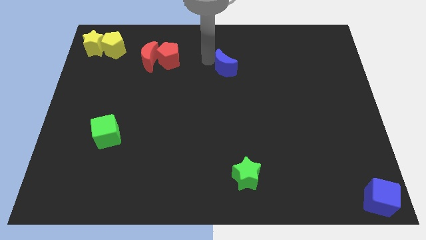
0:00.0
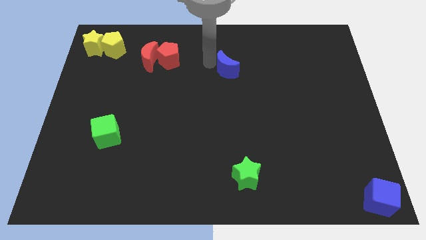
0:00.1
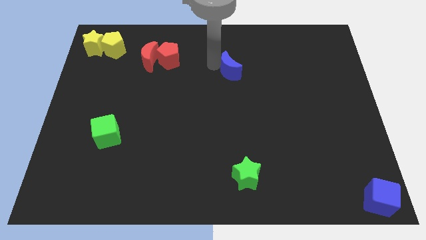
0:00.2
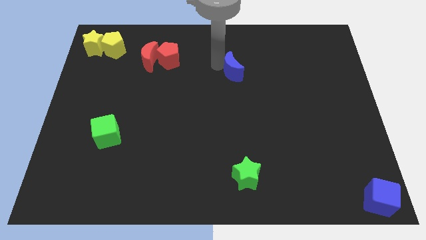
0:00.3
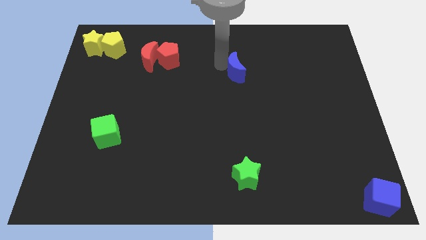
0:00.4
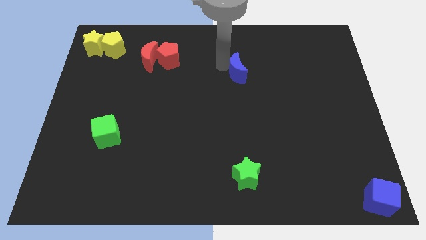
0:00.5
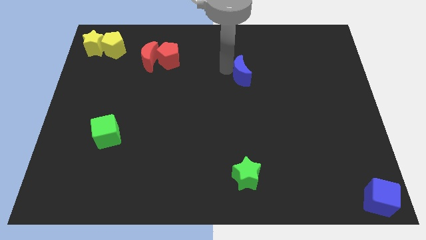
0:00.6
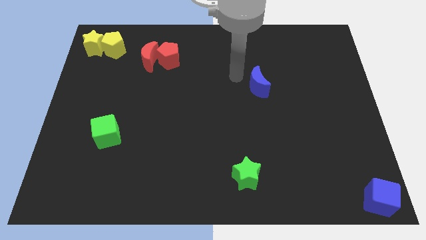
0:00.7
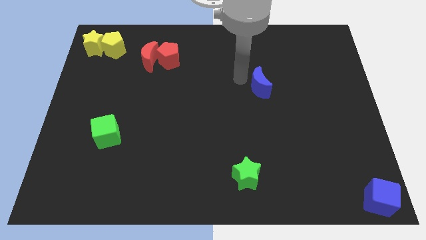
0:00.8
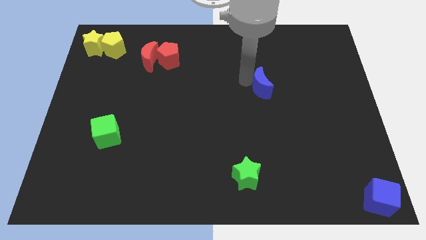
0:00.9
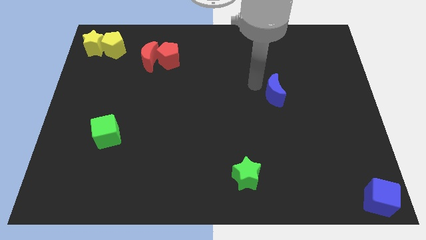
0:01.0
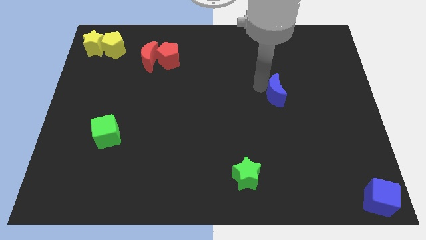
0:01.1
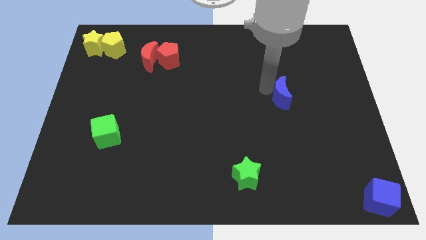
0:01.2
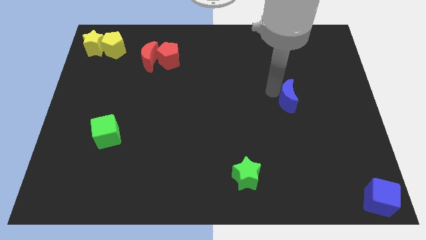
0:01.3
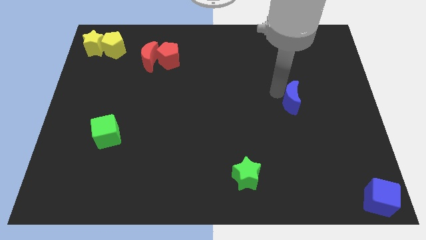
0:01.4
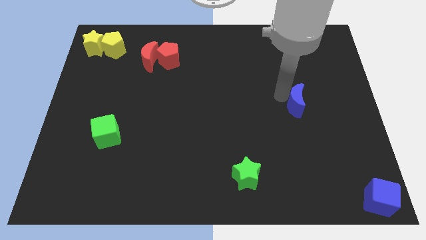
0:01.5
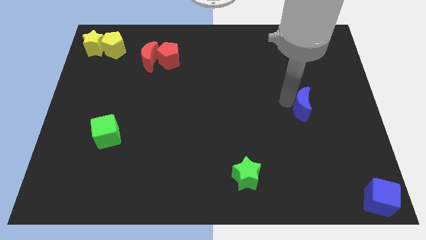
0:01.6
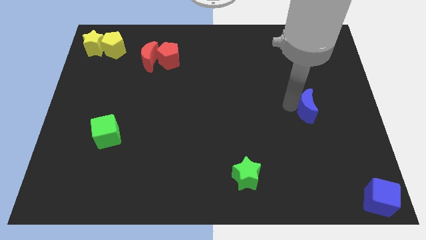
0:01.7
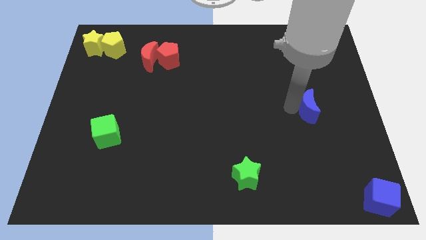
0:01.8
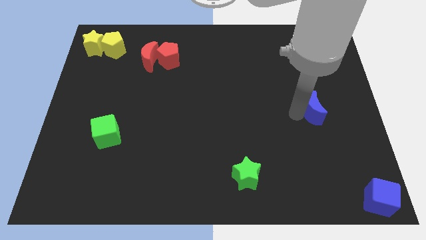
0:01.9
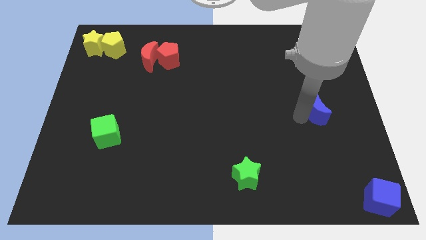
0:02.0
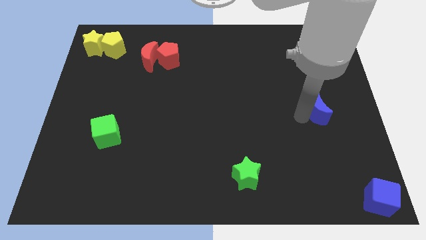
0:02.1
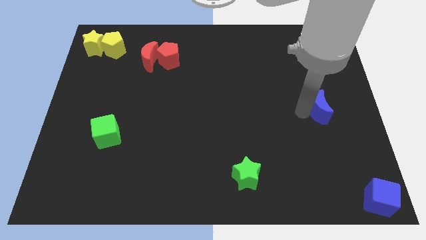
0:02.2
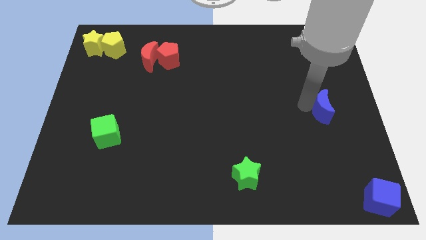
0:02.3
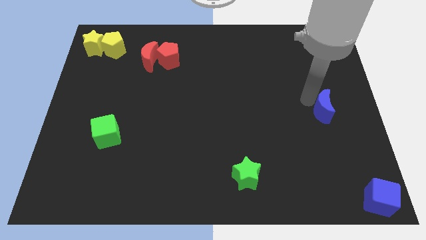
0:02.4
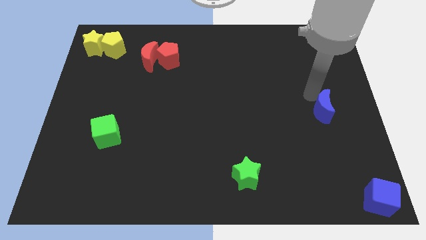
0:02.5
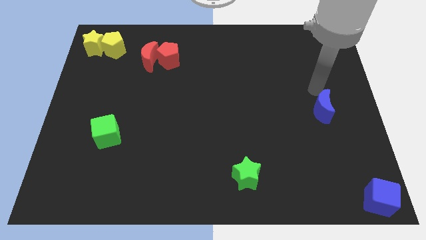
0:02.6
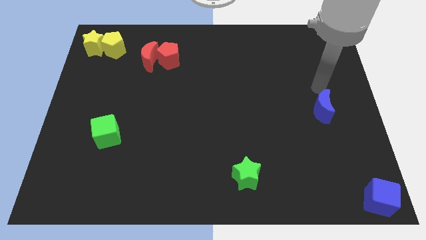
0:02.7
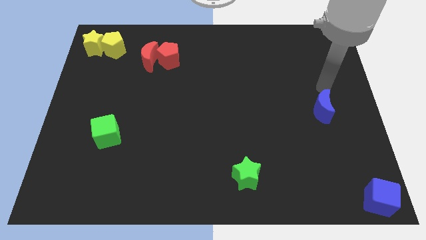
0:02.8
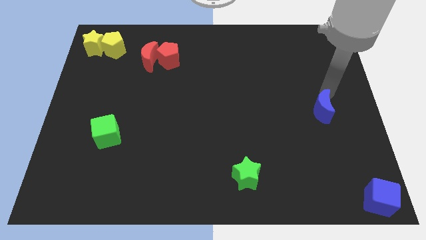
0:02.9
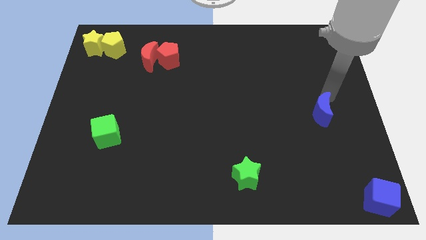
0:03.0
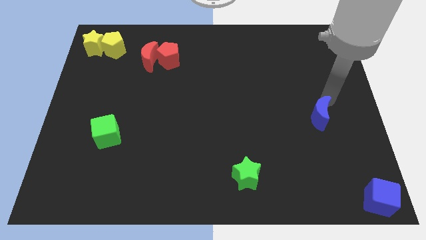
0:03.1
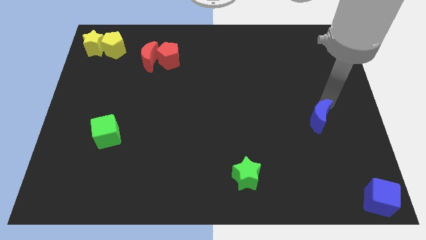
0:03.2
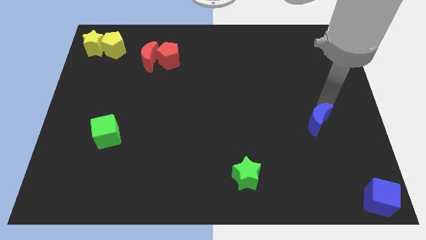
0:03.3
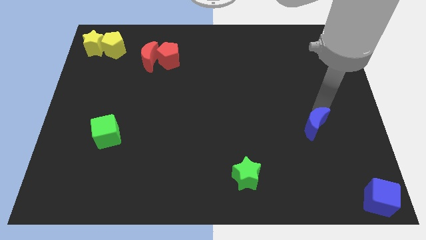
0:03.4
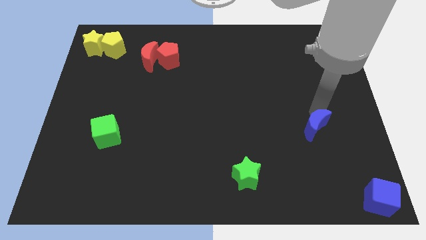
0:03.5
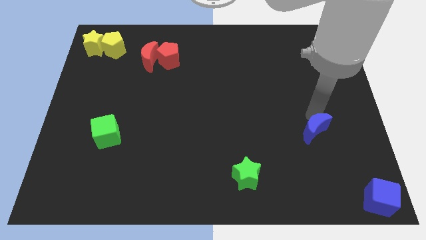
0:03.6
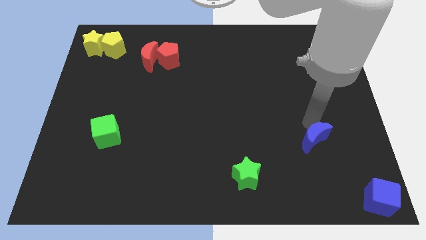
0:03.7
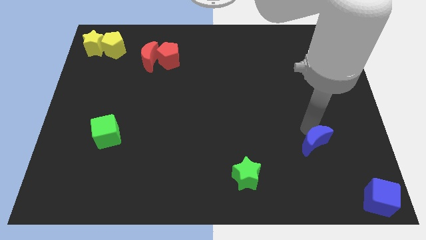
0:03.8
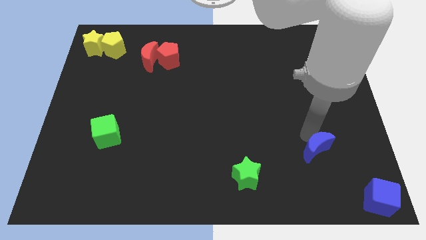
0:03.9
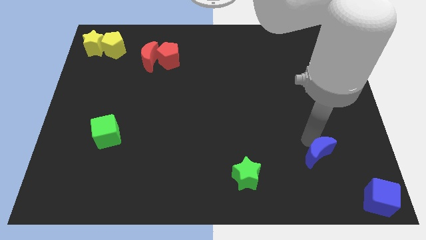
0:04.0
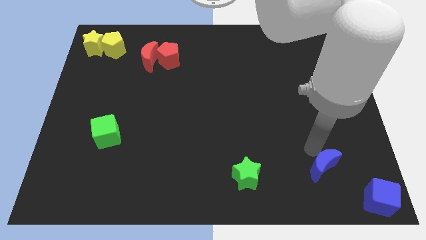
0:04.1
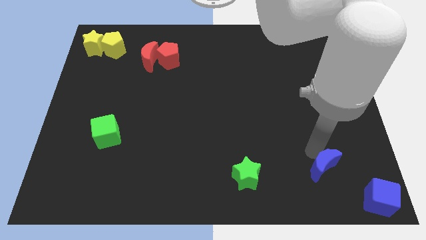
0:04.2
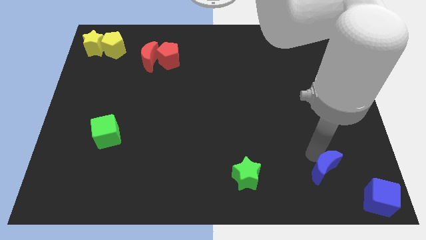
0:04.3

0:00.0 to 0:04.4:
place blue moon parallel to green star

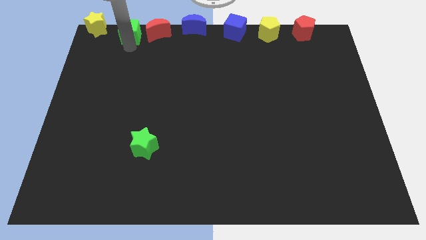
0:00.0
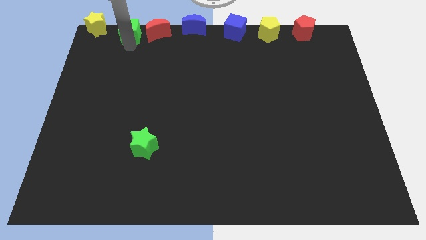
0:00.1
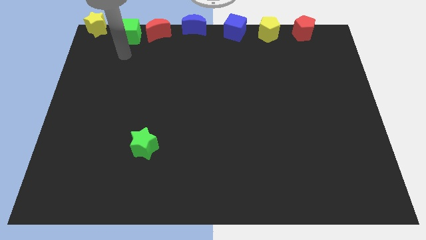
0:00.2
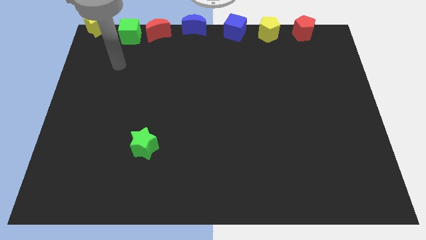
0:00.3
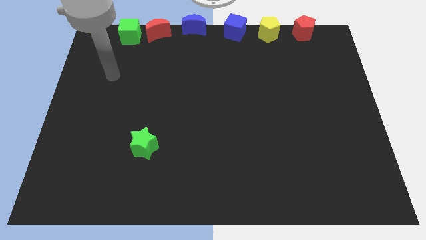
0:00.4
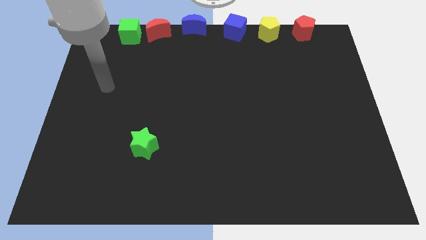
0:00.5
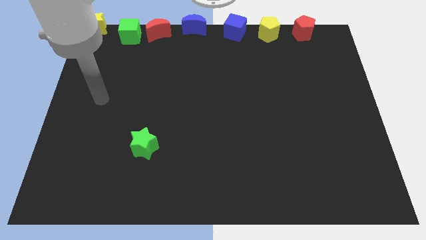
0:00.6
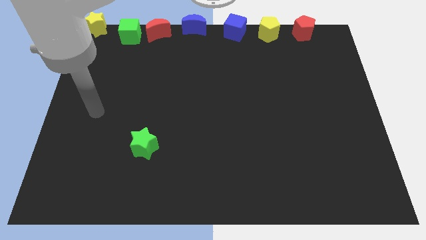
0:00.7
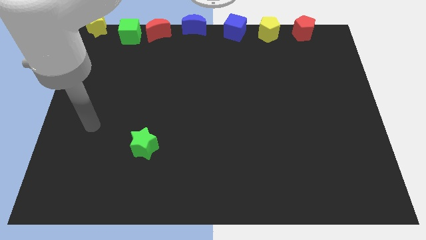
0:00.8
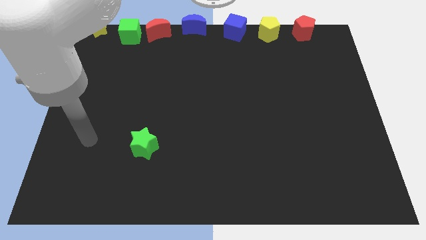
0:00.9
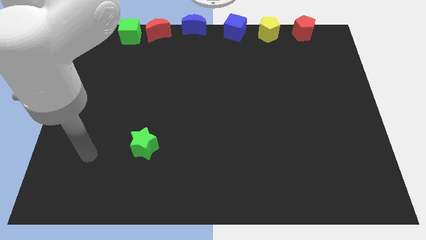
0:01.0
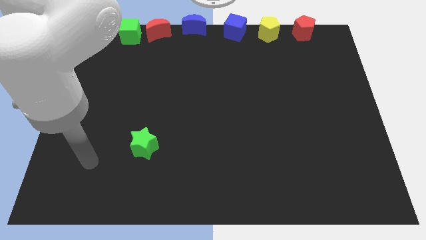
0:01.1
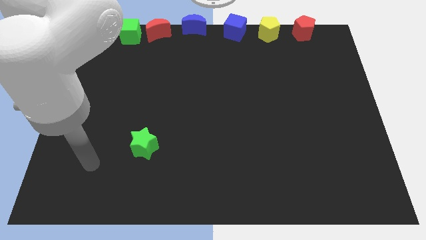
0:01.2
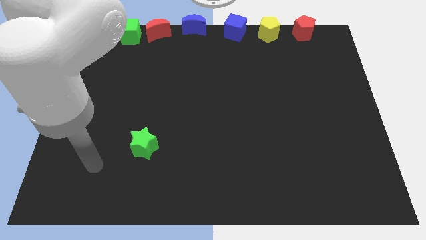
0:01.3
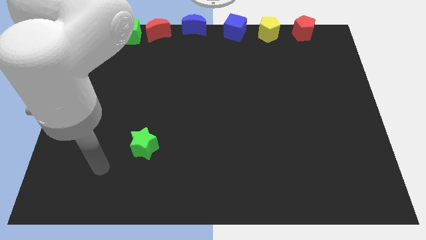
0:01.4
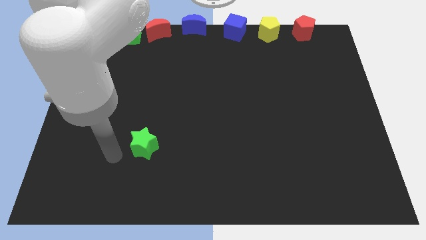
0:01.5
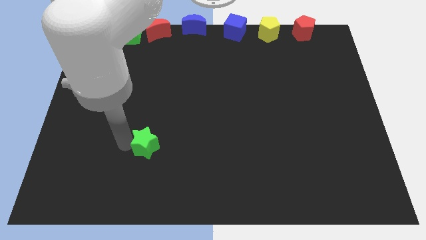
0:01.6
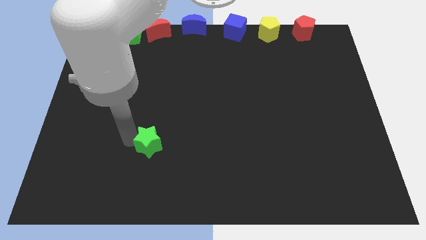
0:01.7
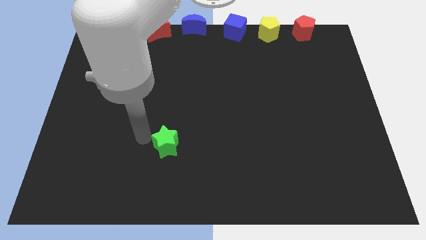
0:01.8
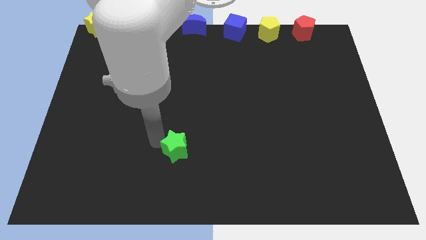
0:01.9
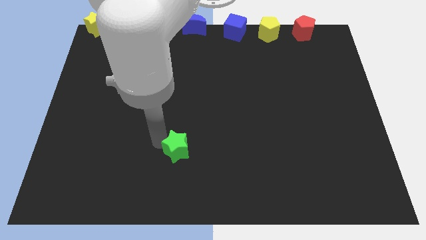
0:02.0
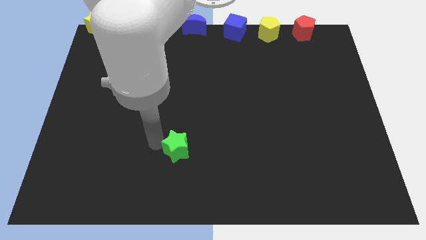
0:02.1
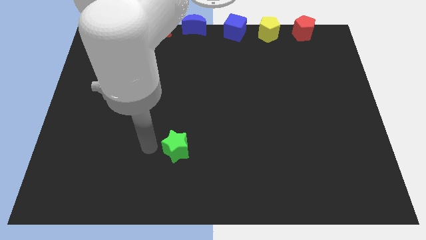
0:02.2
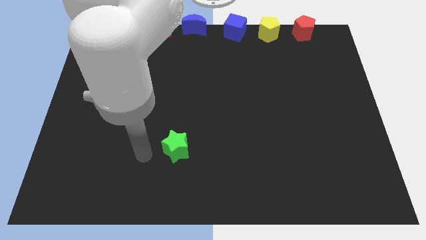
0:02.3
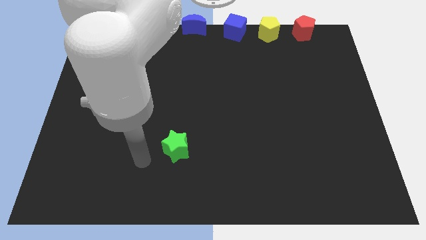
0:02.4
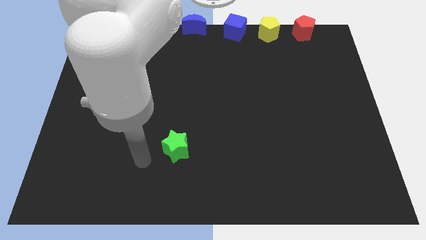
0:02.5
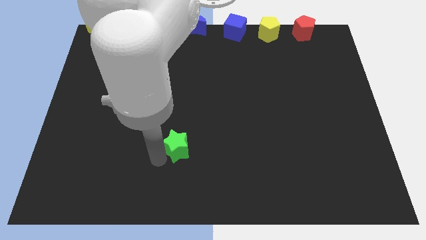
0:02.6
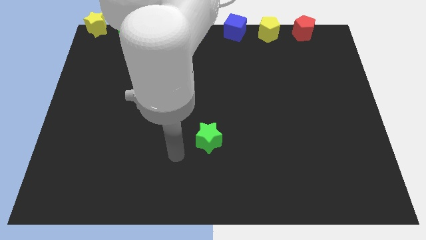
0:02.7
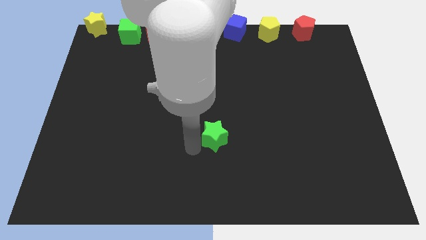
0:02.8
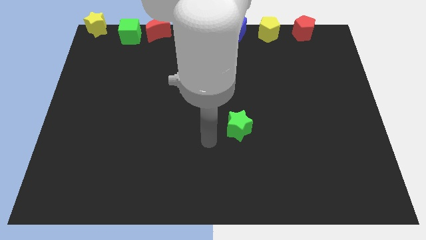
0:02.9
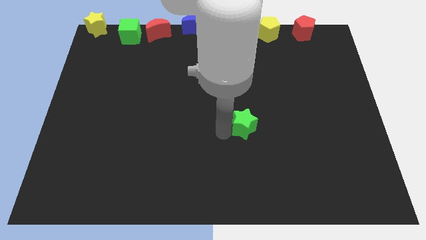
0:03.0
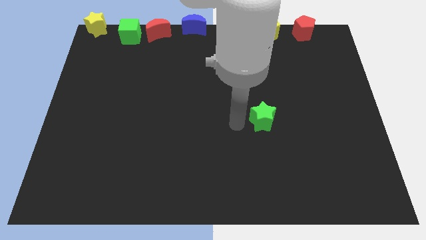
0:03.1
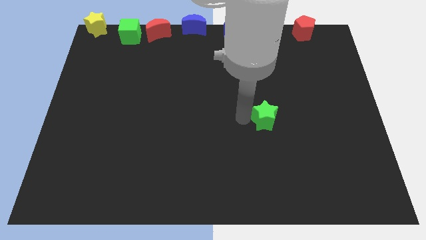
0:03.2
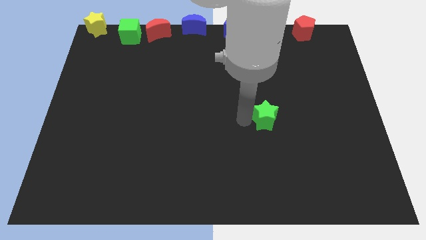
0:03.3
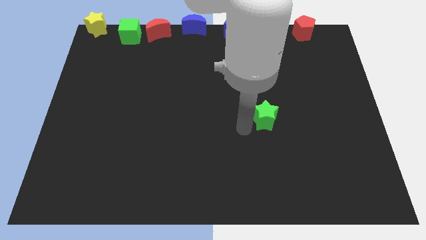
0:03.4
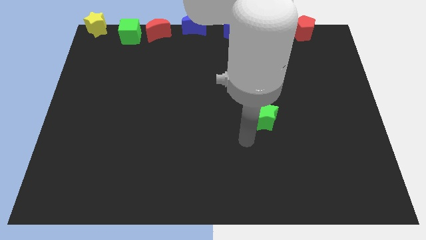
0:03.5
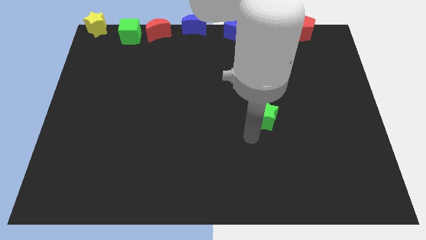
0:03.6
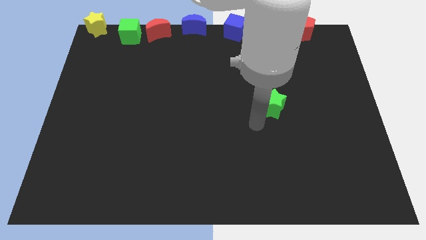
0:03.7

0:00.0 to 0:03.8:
push green star below yellow pentagon

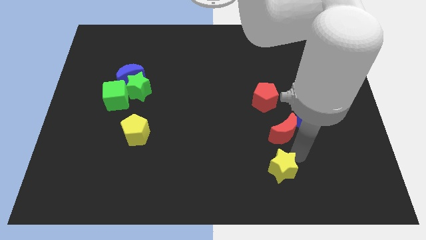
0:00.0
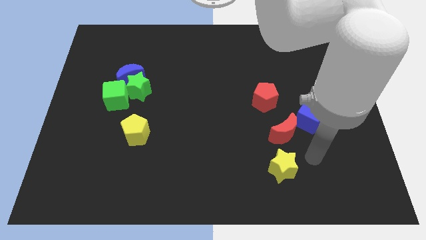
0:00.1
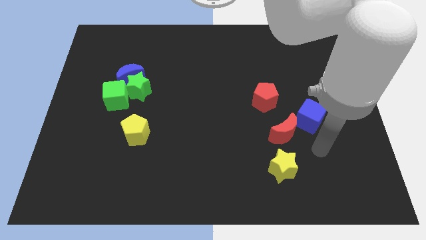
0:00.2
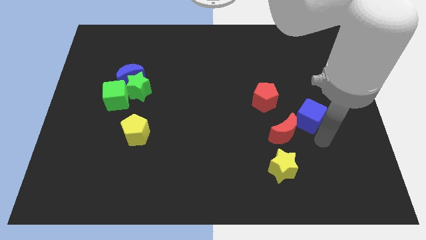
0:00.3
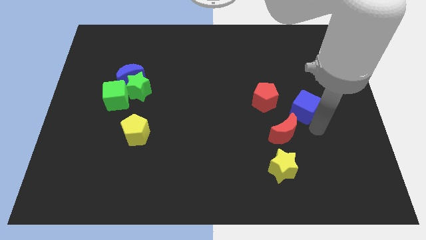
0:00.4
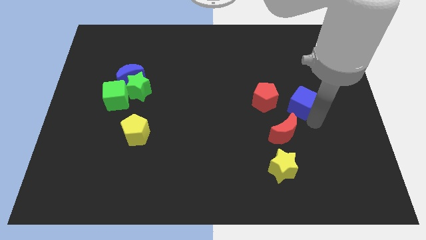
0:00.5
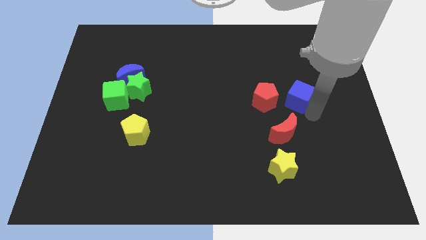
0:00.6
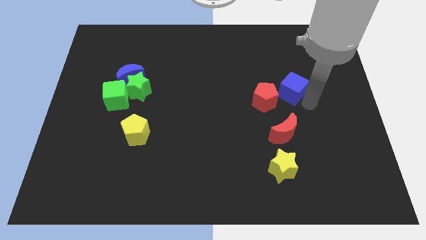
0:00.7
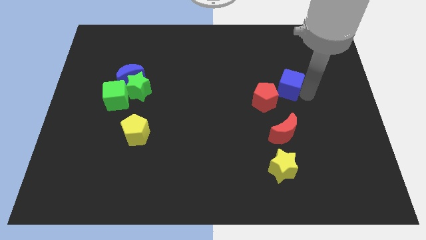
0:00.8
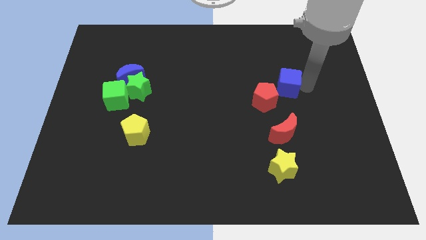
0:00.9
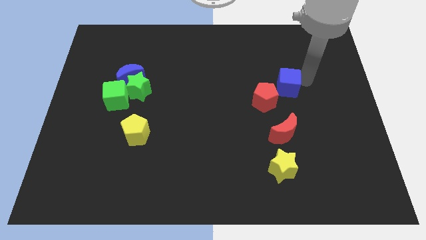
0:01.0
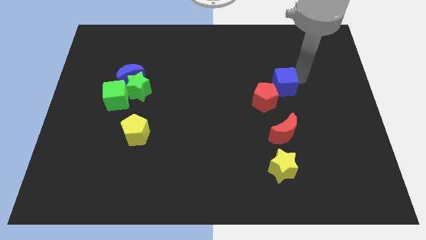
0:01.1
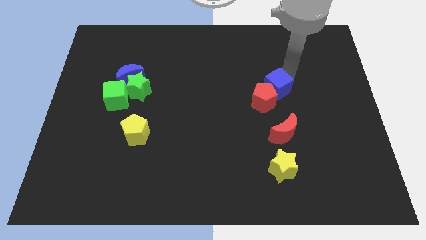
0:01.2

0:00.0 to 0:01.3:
push the blue cube towards the red pentagon
